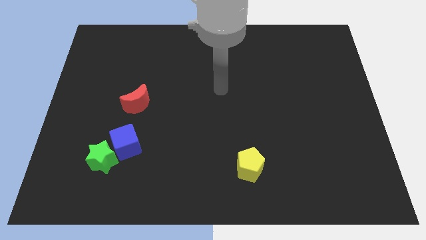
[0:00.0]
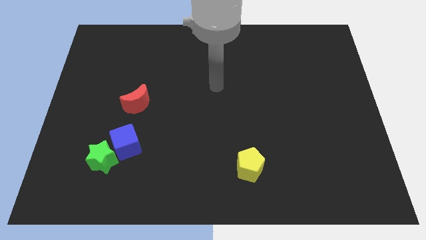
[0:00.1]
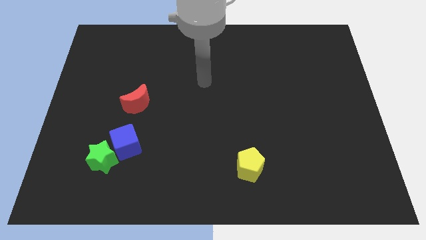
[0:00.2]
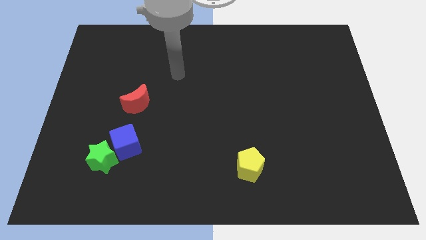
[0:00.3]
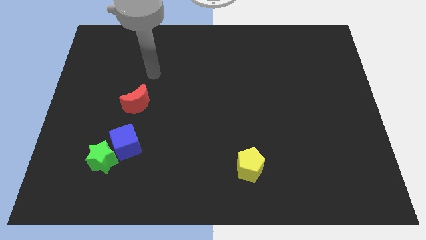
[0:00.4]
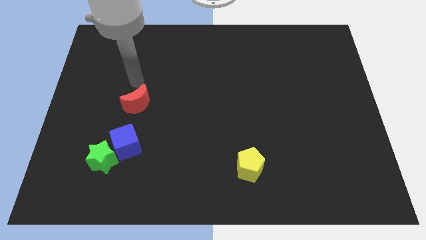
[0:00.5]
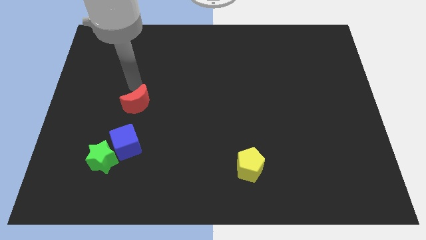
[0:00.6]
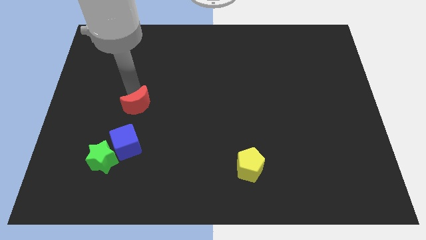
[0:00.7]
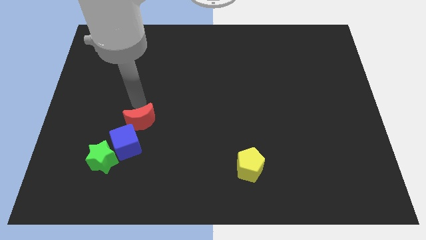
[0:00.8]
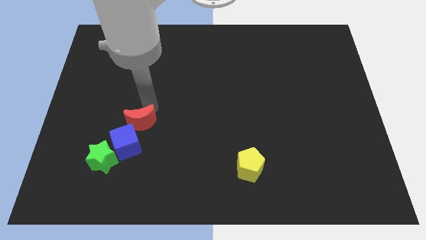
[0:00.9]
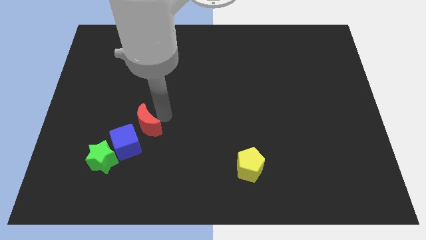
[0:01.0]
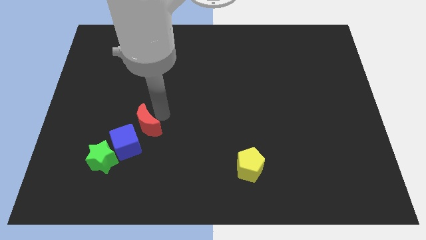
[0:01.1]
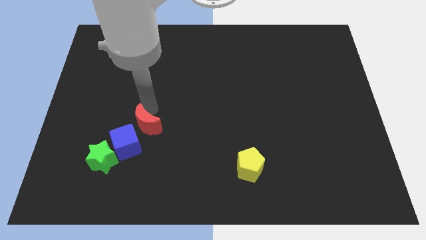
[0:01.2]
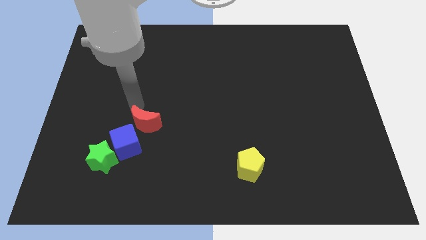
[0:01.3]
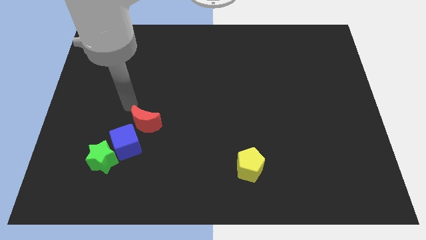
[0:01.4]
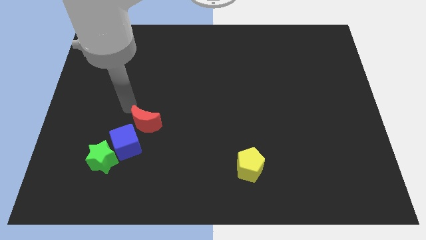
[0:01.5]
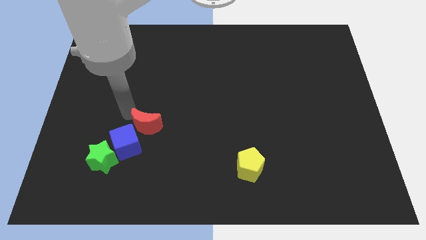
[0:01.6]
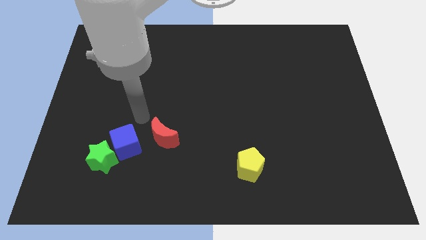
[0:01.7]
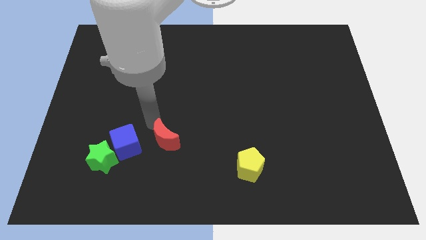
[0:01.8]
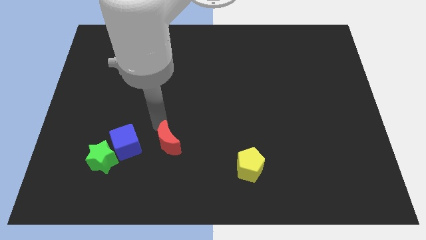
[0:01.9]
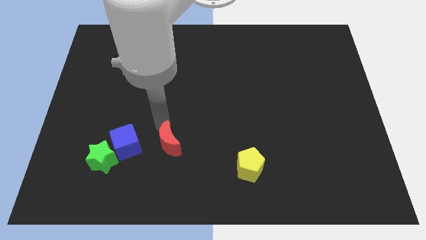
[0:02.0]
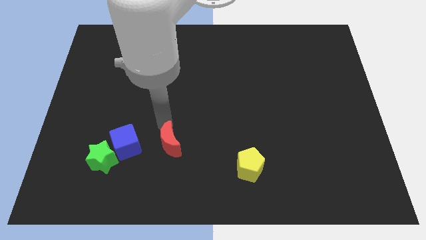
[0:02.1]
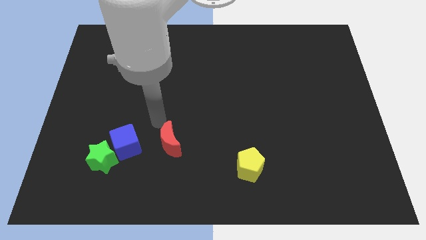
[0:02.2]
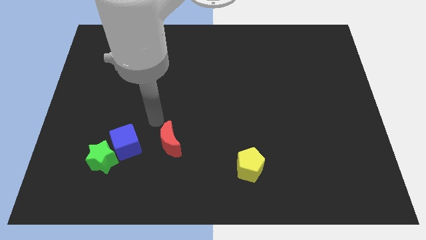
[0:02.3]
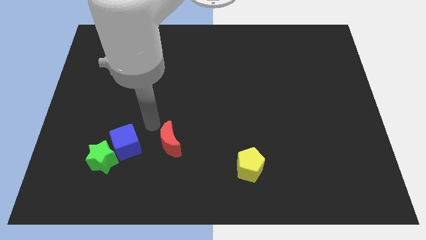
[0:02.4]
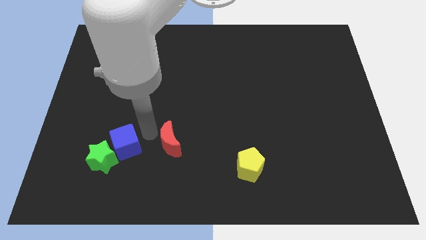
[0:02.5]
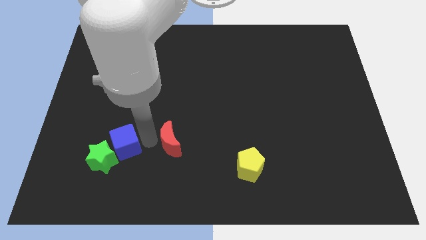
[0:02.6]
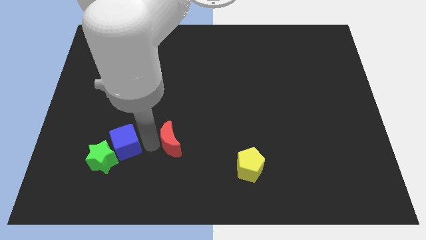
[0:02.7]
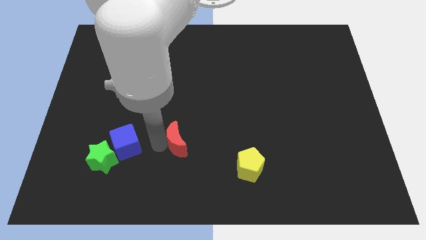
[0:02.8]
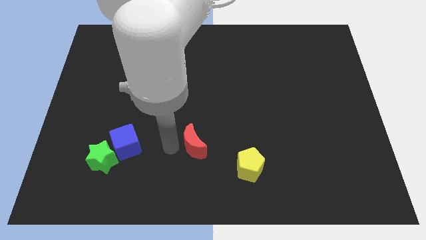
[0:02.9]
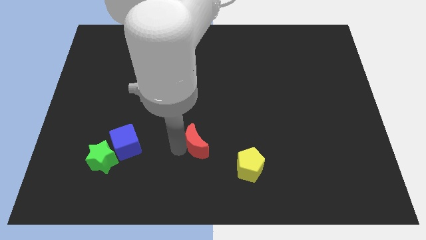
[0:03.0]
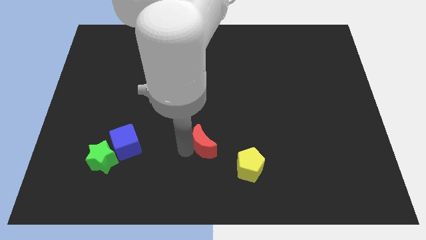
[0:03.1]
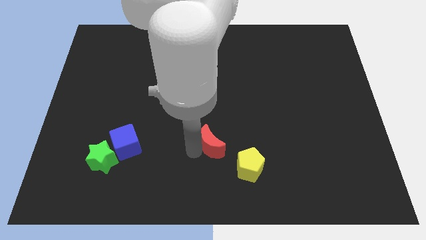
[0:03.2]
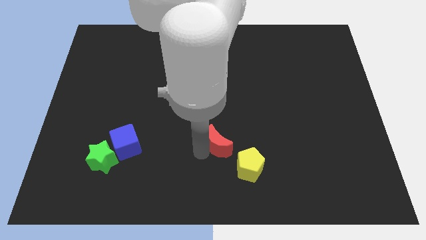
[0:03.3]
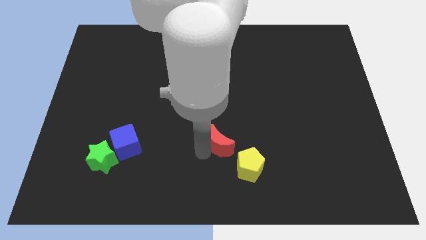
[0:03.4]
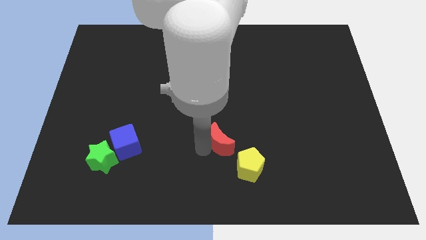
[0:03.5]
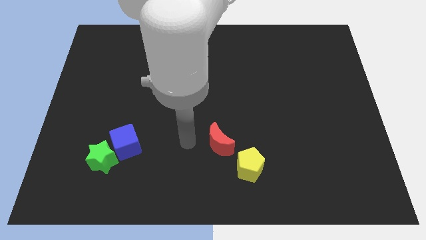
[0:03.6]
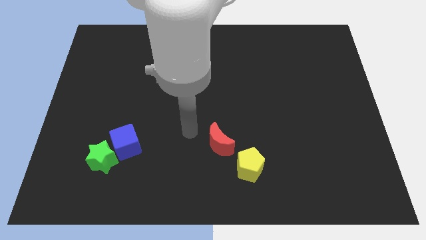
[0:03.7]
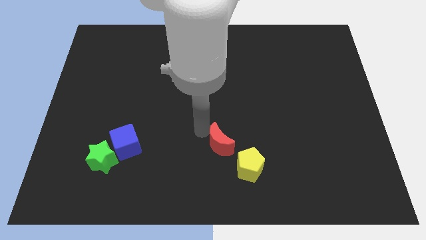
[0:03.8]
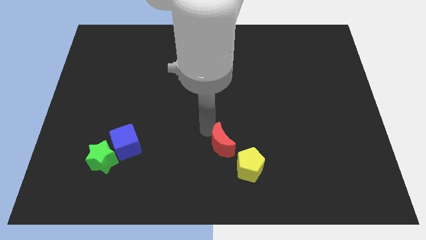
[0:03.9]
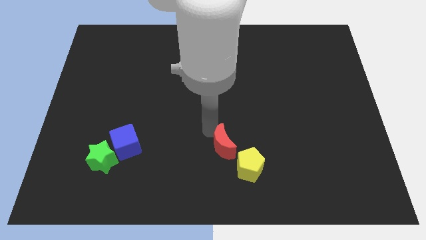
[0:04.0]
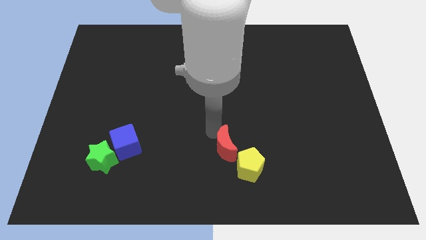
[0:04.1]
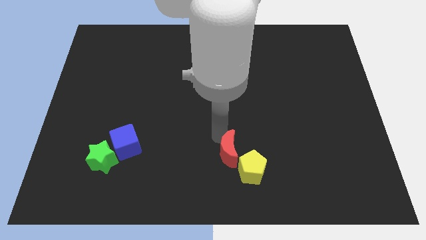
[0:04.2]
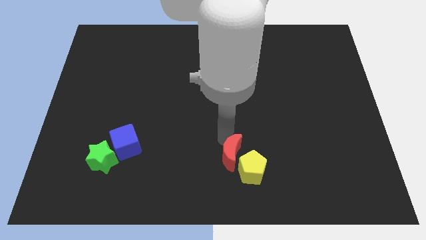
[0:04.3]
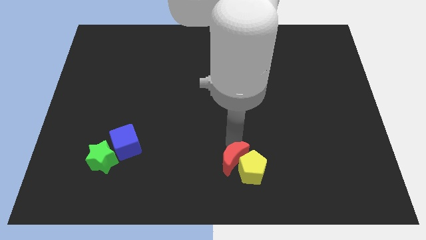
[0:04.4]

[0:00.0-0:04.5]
push the red block next to the pentagon

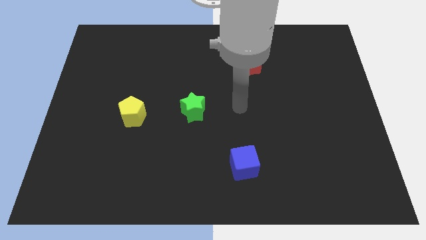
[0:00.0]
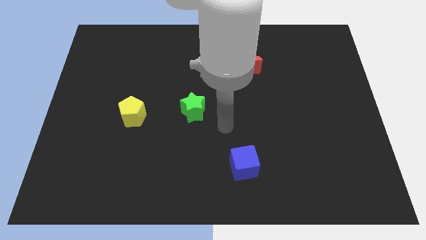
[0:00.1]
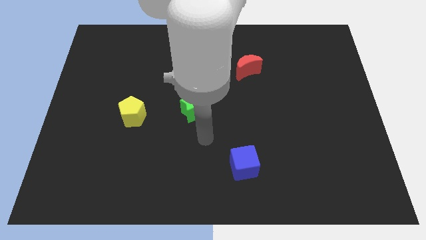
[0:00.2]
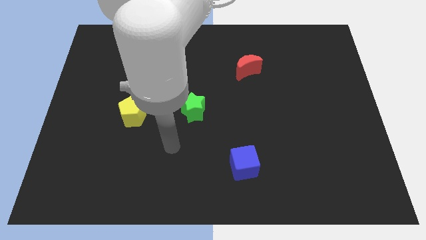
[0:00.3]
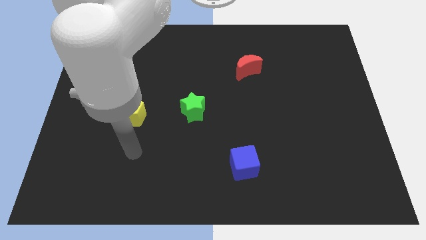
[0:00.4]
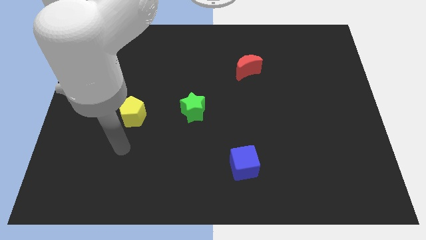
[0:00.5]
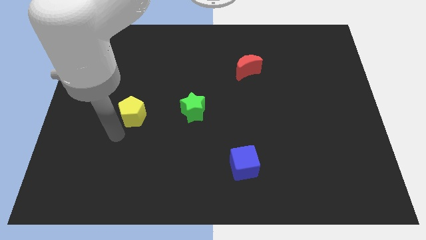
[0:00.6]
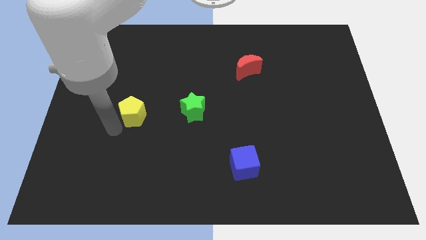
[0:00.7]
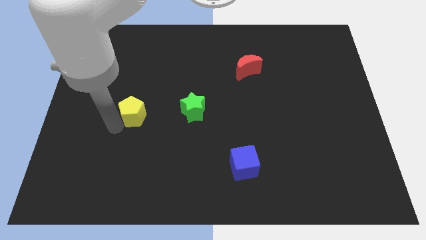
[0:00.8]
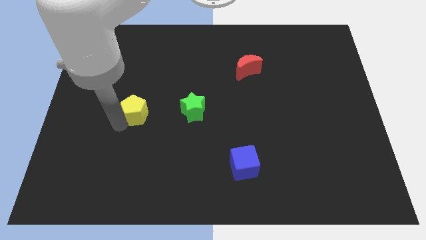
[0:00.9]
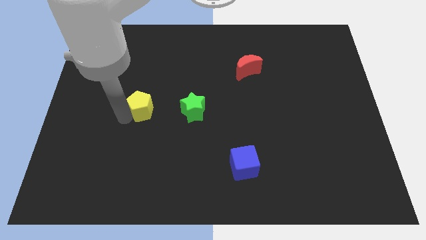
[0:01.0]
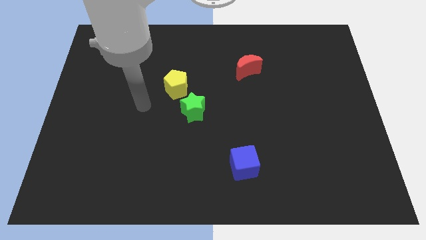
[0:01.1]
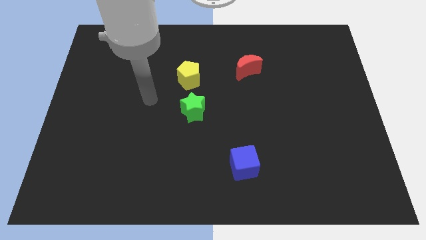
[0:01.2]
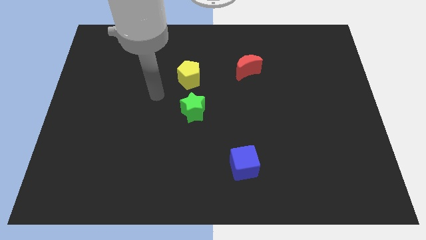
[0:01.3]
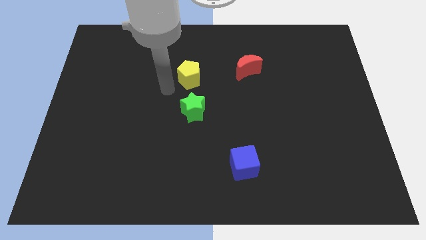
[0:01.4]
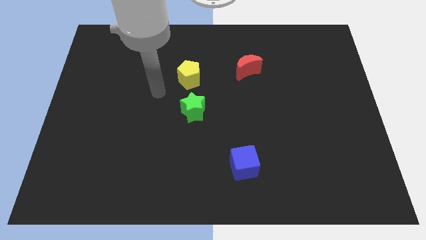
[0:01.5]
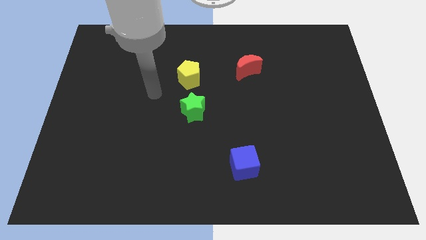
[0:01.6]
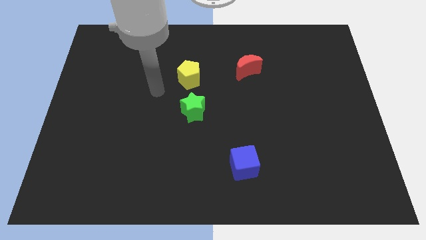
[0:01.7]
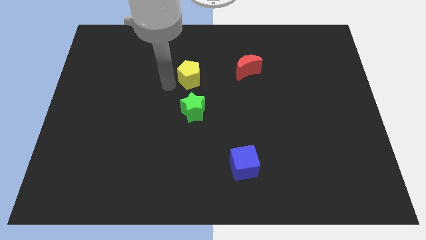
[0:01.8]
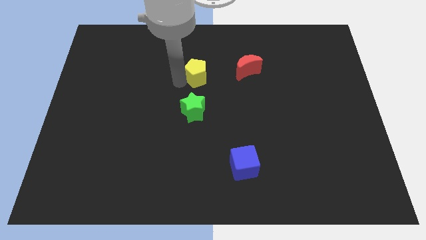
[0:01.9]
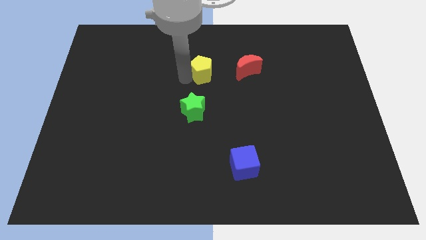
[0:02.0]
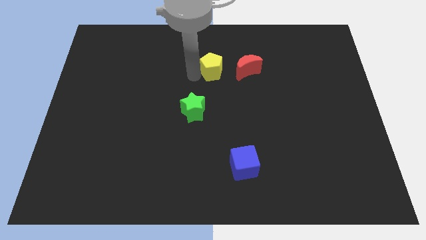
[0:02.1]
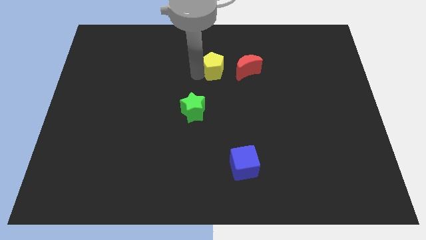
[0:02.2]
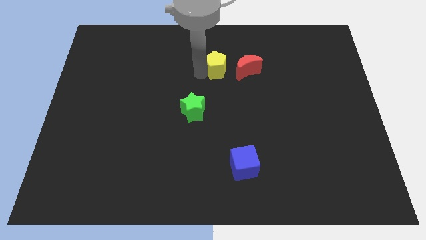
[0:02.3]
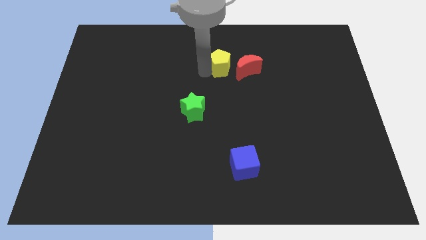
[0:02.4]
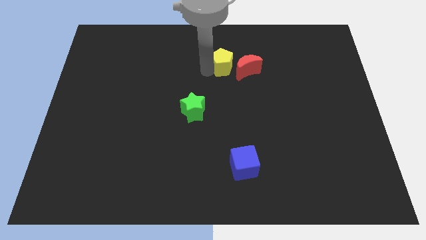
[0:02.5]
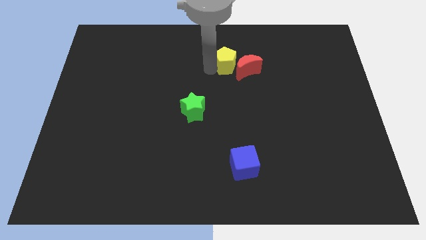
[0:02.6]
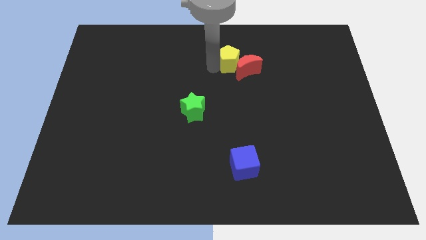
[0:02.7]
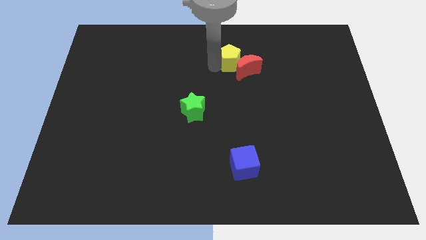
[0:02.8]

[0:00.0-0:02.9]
move the pentagon next to the red block

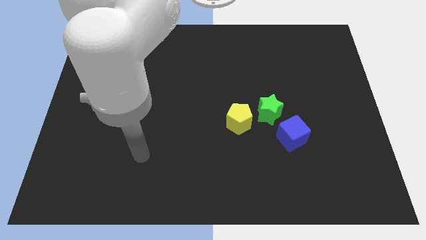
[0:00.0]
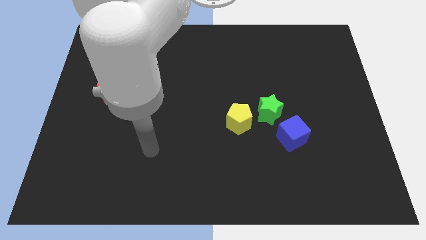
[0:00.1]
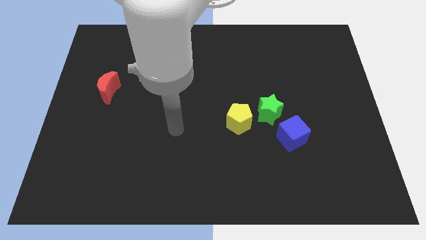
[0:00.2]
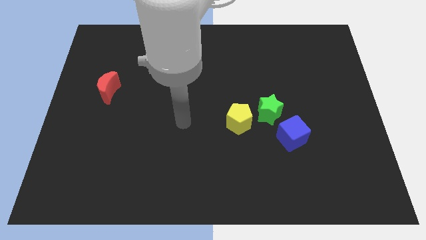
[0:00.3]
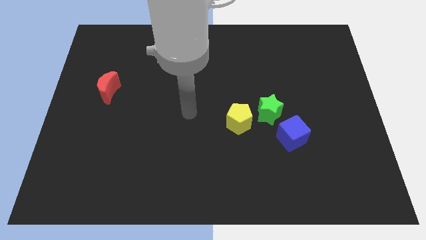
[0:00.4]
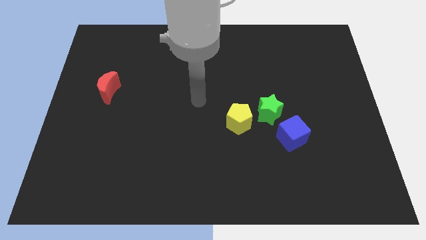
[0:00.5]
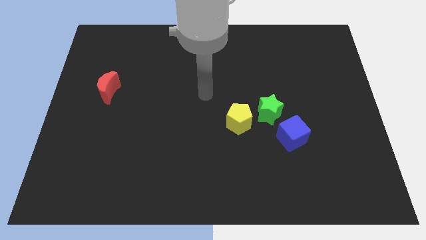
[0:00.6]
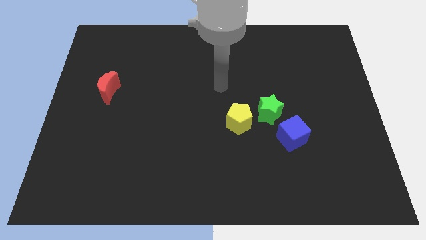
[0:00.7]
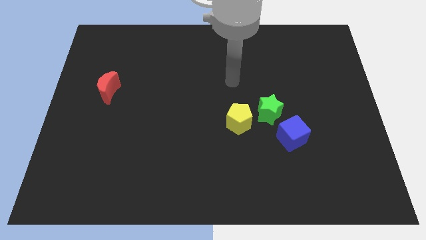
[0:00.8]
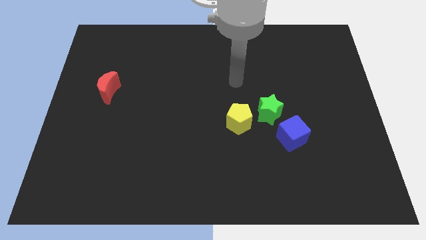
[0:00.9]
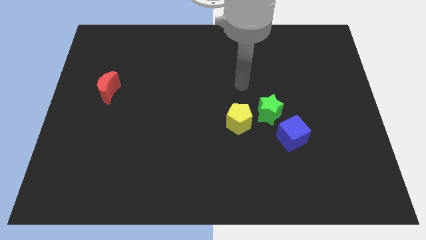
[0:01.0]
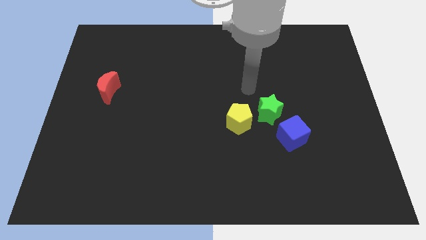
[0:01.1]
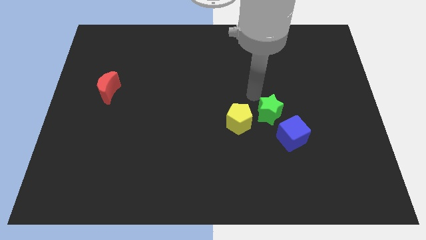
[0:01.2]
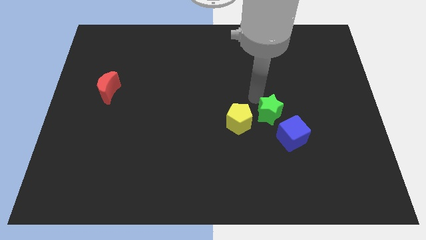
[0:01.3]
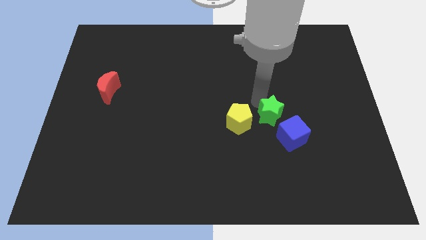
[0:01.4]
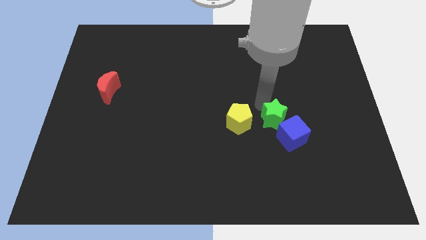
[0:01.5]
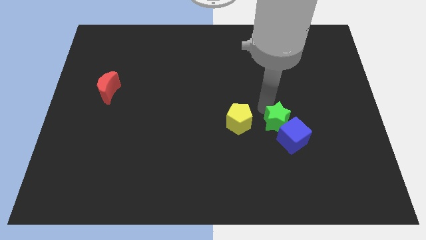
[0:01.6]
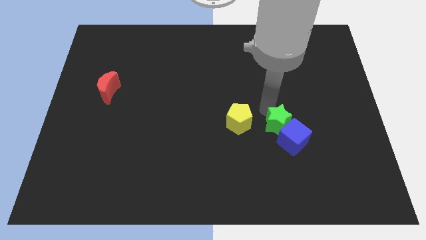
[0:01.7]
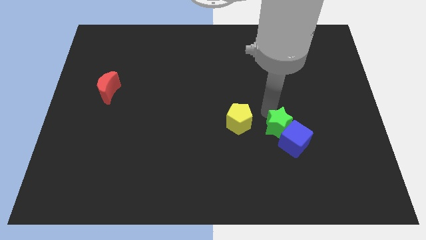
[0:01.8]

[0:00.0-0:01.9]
push the green block next to the cube
